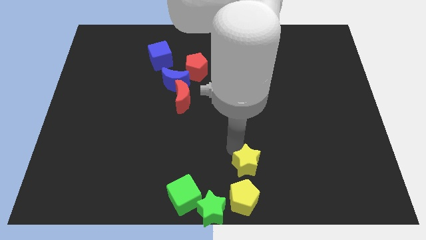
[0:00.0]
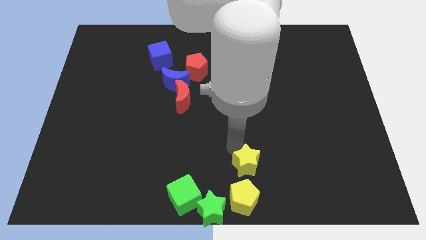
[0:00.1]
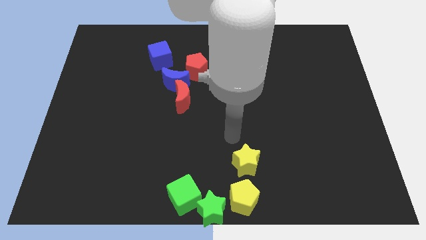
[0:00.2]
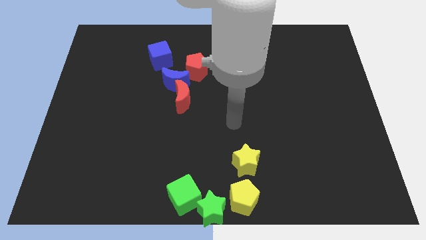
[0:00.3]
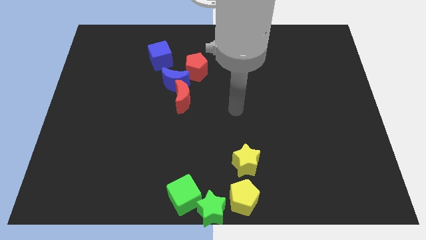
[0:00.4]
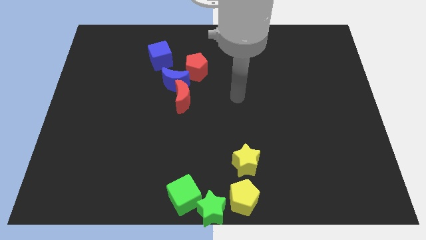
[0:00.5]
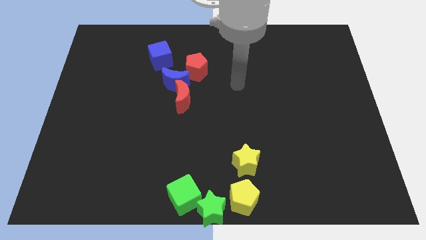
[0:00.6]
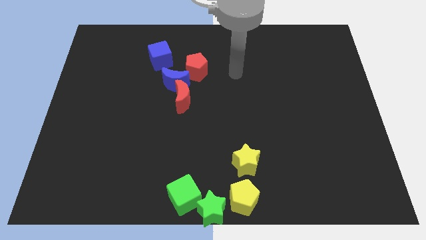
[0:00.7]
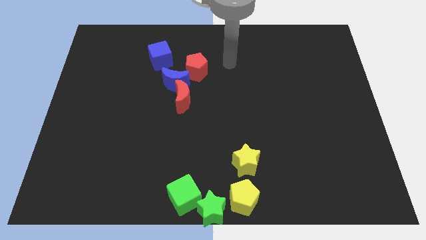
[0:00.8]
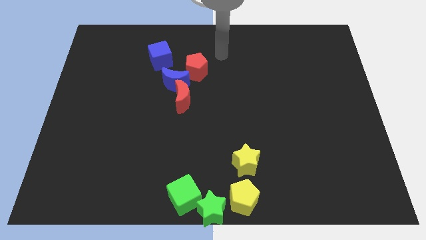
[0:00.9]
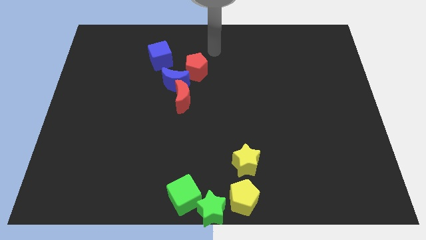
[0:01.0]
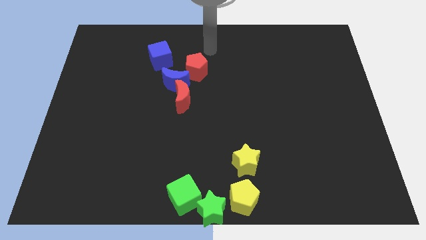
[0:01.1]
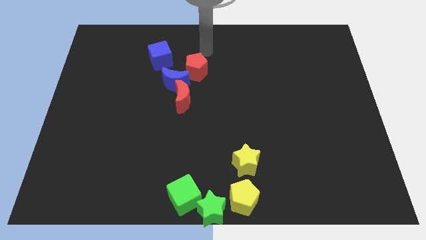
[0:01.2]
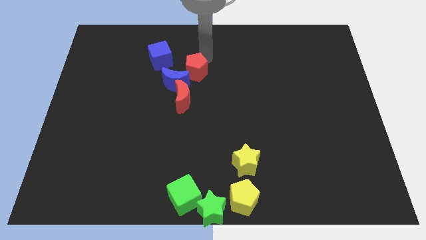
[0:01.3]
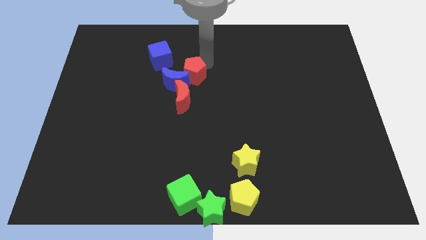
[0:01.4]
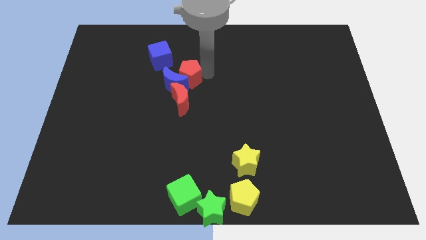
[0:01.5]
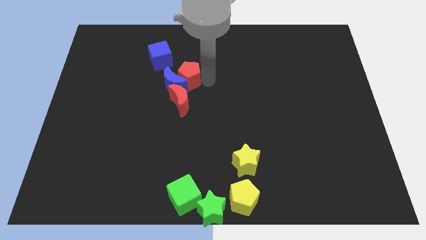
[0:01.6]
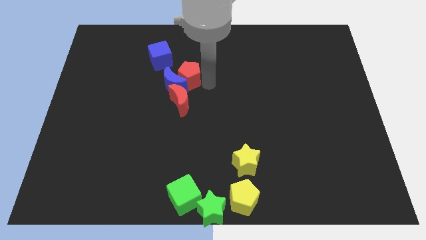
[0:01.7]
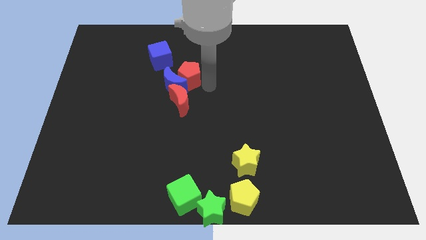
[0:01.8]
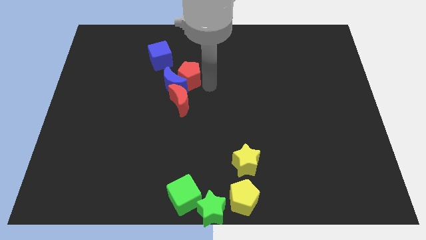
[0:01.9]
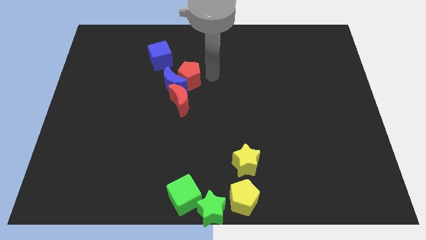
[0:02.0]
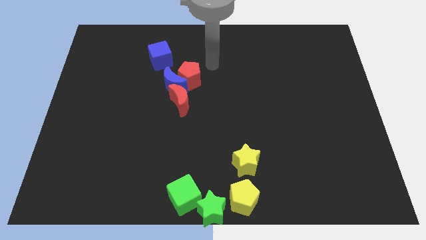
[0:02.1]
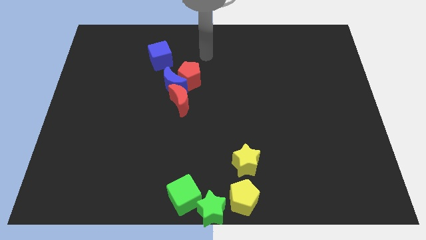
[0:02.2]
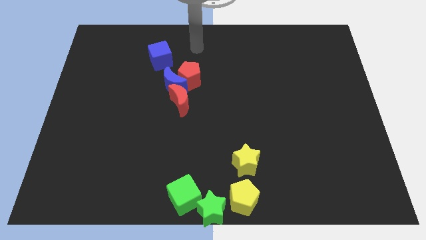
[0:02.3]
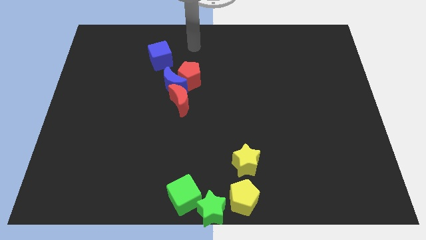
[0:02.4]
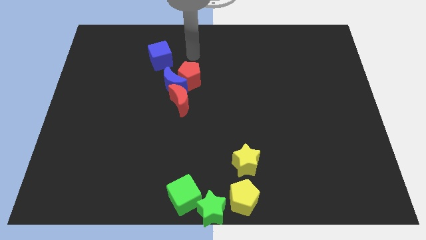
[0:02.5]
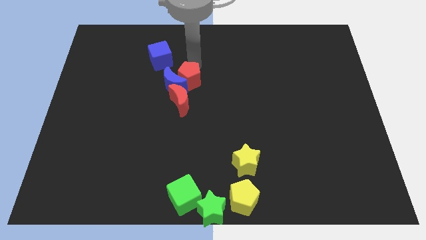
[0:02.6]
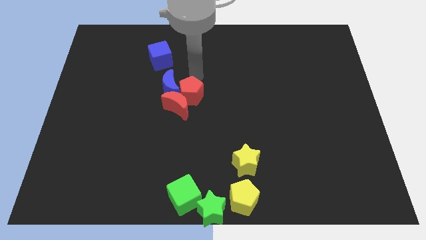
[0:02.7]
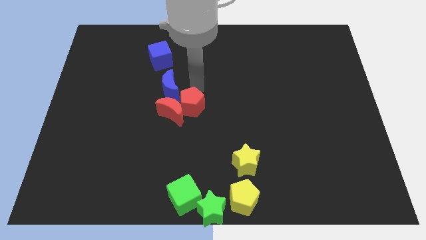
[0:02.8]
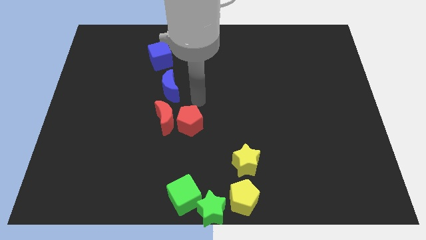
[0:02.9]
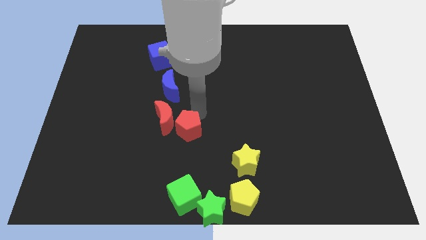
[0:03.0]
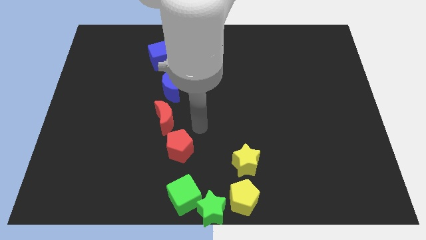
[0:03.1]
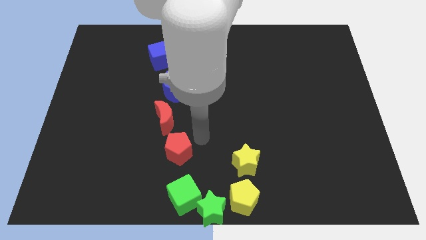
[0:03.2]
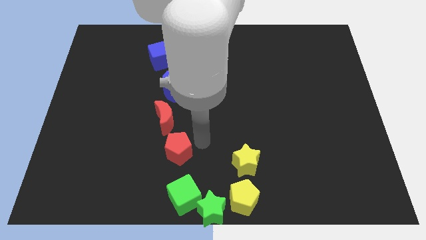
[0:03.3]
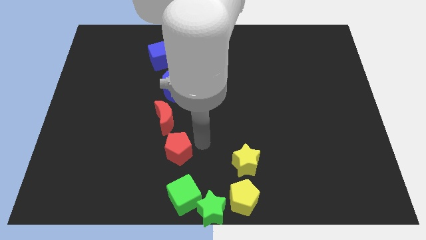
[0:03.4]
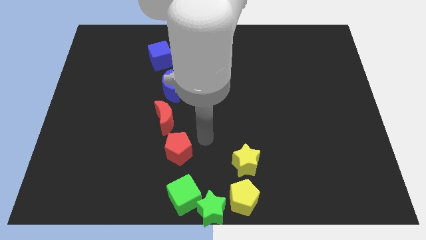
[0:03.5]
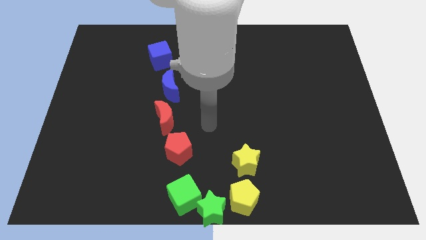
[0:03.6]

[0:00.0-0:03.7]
move the red pentagon above the green cube

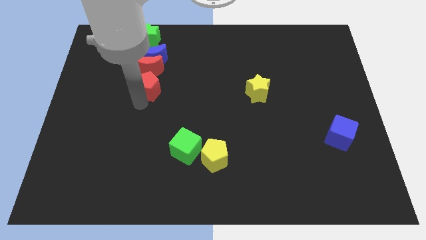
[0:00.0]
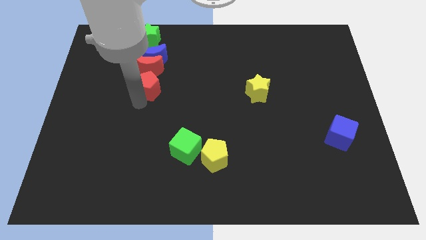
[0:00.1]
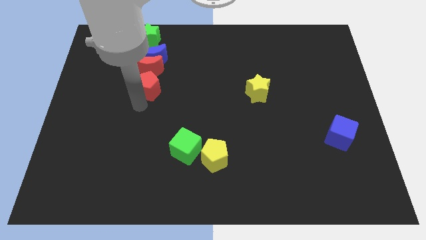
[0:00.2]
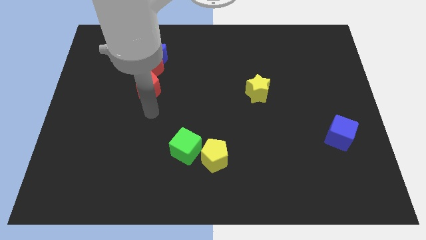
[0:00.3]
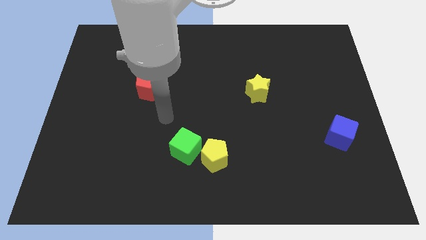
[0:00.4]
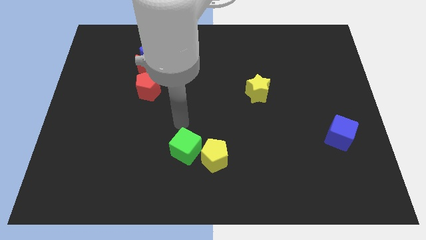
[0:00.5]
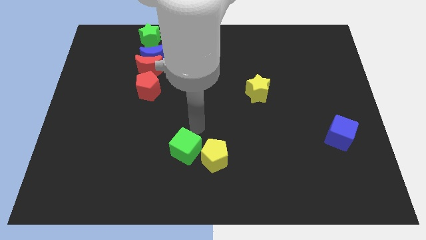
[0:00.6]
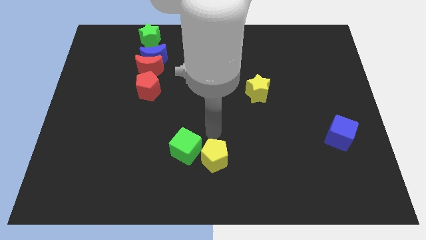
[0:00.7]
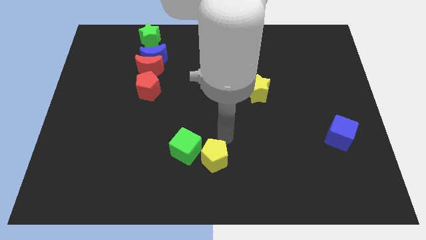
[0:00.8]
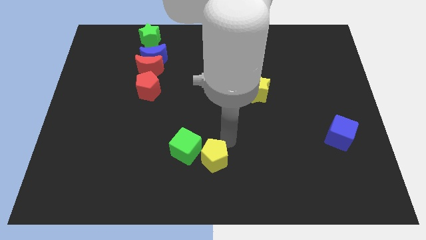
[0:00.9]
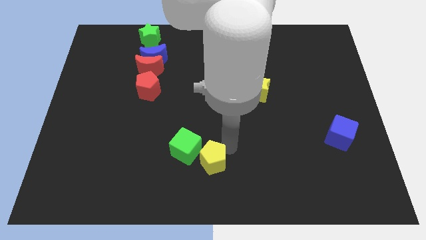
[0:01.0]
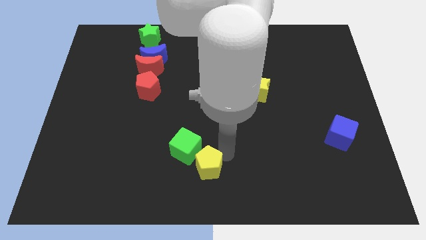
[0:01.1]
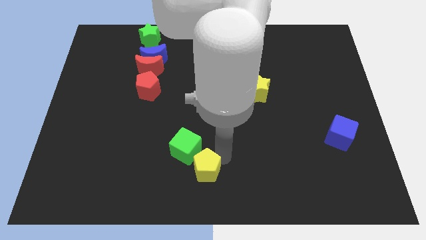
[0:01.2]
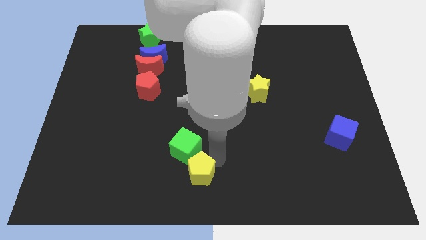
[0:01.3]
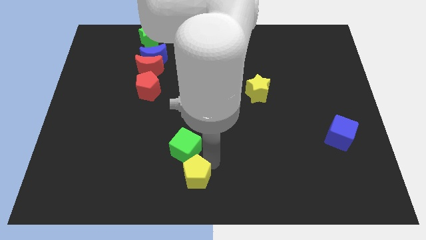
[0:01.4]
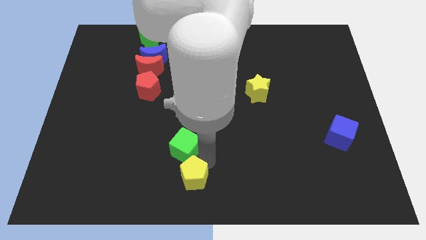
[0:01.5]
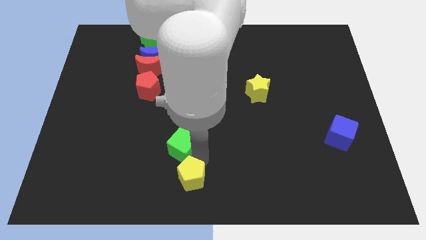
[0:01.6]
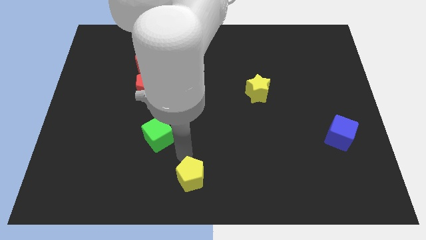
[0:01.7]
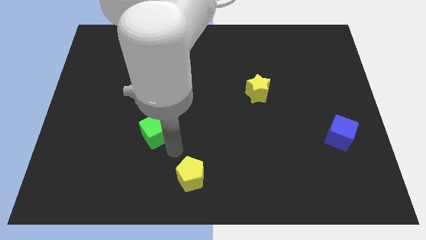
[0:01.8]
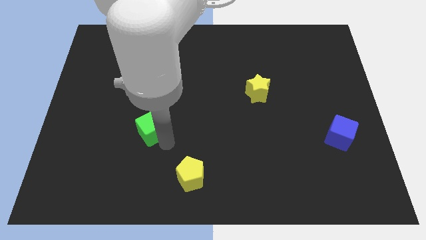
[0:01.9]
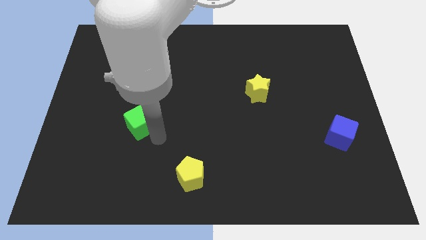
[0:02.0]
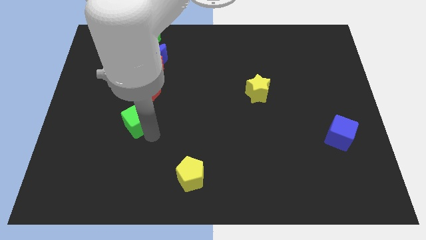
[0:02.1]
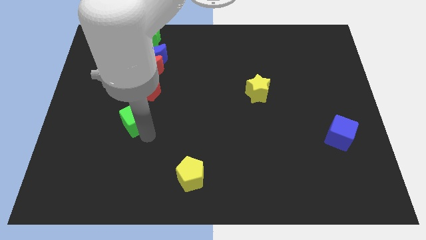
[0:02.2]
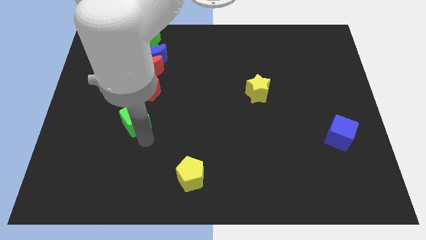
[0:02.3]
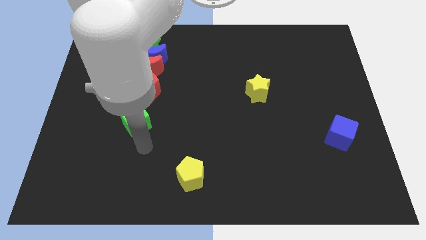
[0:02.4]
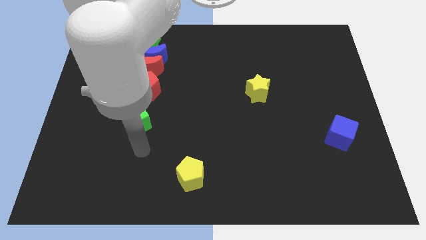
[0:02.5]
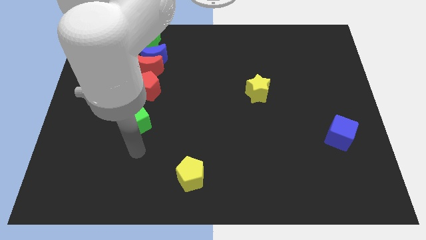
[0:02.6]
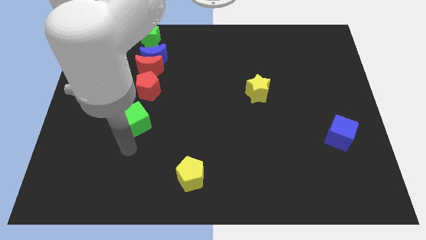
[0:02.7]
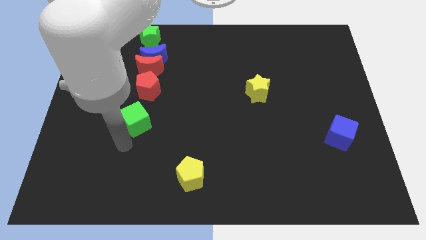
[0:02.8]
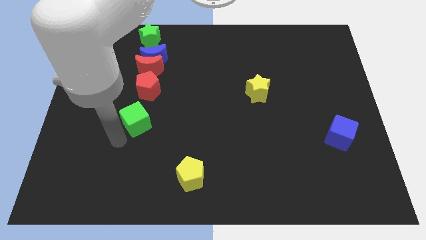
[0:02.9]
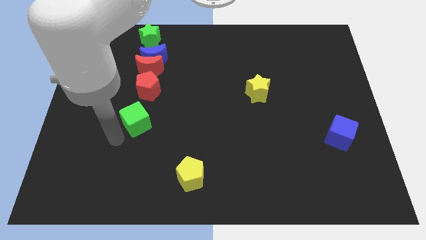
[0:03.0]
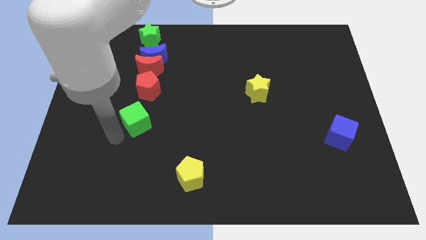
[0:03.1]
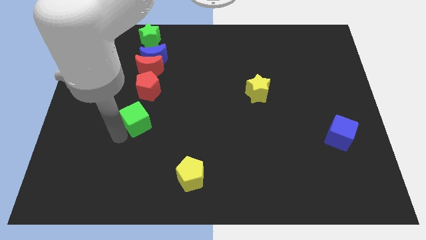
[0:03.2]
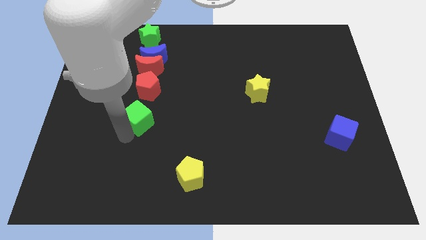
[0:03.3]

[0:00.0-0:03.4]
move the green cube away from the yellow pentagon

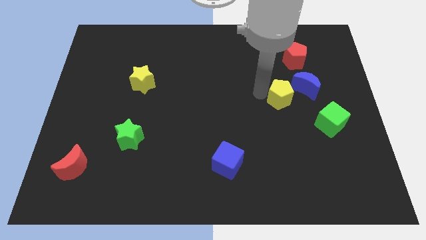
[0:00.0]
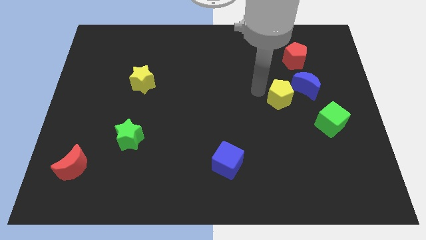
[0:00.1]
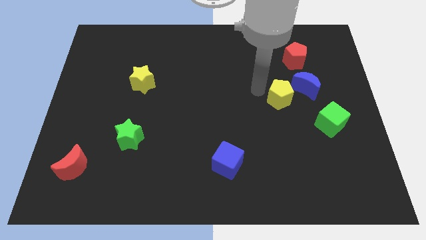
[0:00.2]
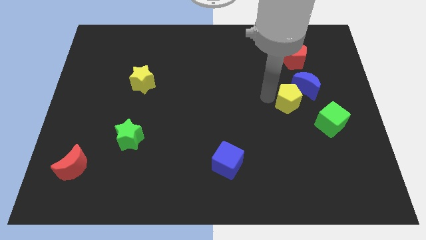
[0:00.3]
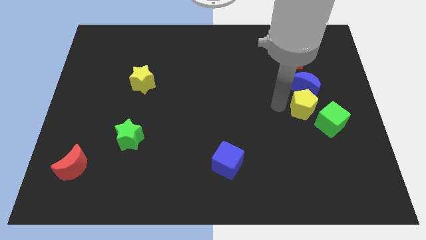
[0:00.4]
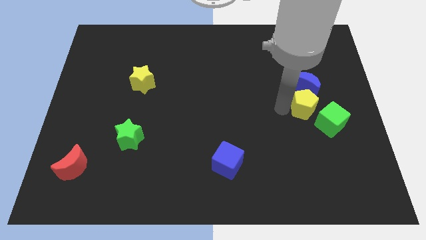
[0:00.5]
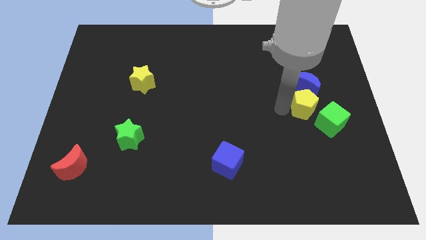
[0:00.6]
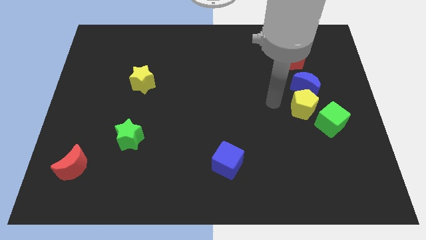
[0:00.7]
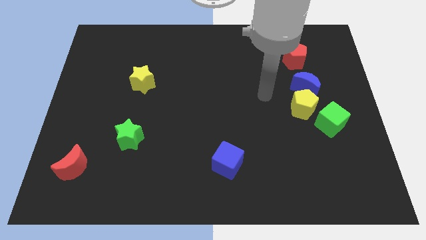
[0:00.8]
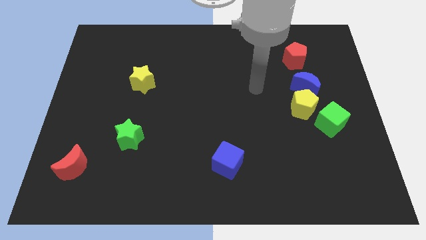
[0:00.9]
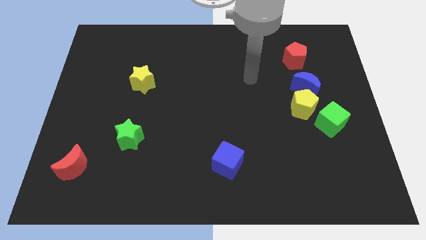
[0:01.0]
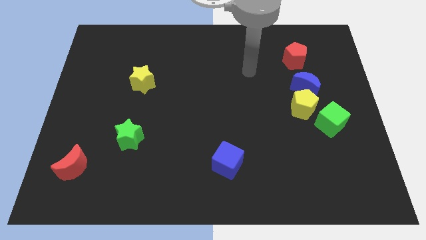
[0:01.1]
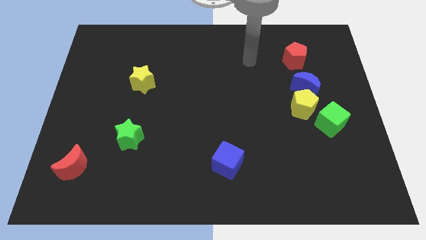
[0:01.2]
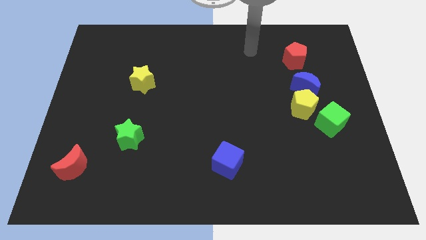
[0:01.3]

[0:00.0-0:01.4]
place yellow pentagon to the top left of green cube

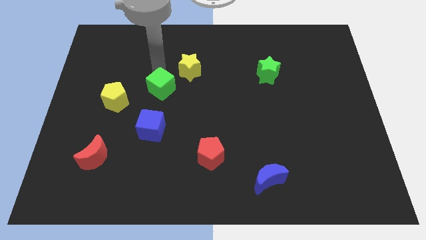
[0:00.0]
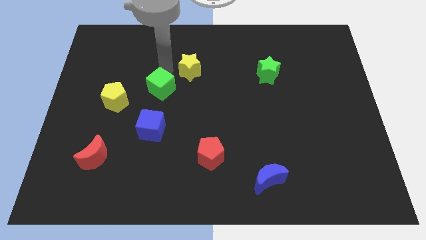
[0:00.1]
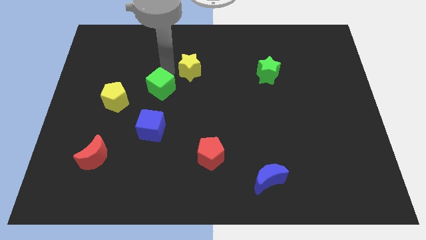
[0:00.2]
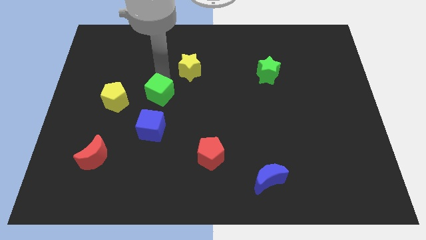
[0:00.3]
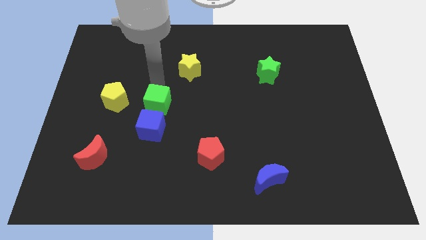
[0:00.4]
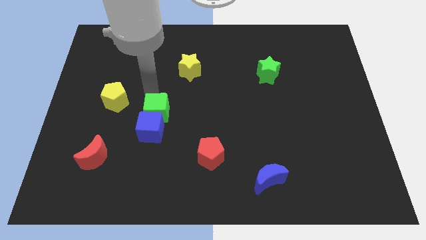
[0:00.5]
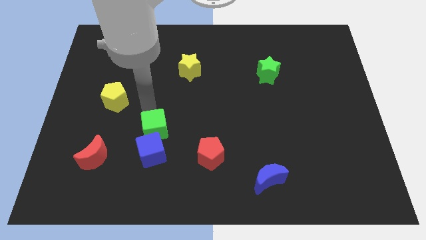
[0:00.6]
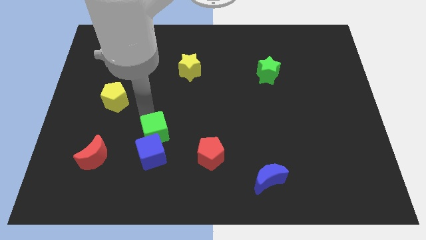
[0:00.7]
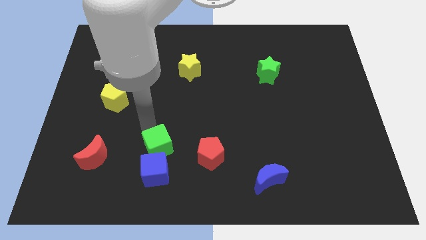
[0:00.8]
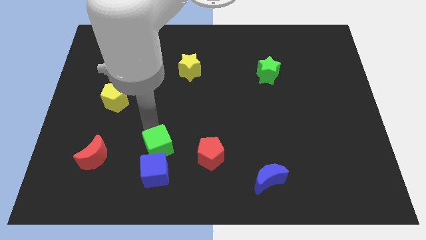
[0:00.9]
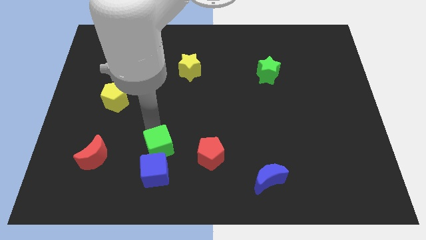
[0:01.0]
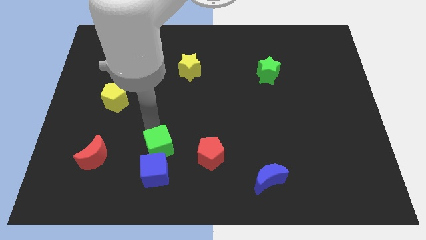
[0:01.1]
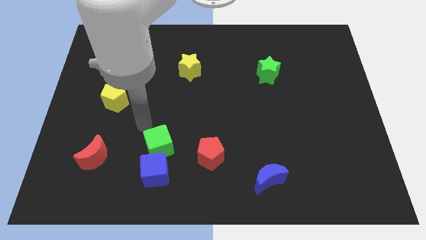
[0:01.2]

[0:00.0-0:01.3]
push the green cube into the blue cube
